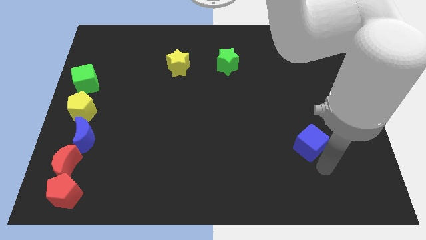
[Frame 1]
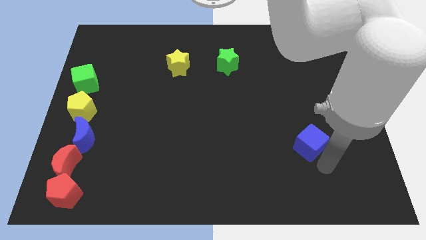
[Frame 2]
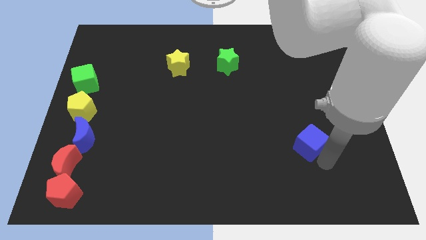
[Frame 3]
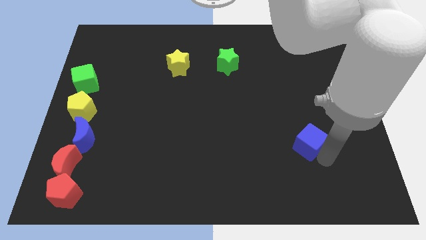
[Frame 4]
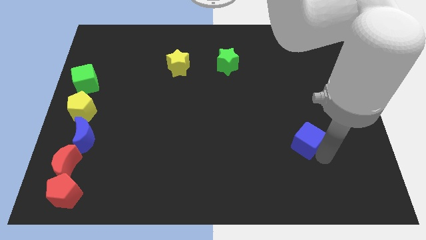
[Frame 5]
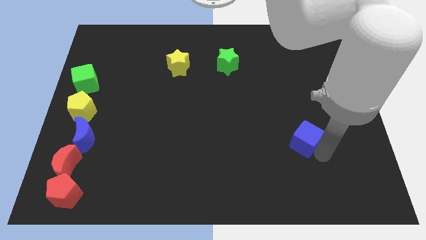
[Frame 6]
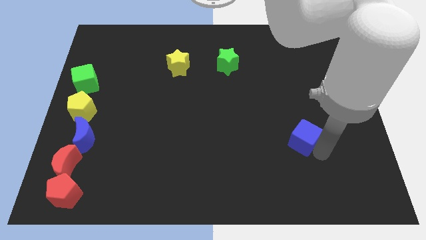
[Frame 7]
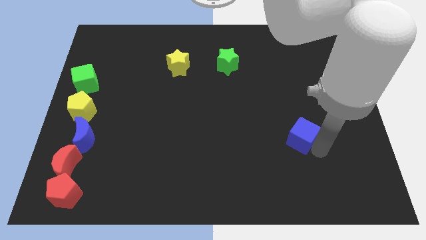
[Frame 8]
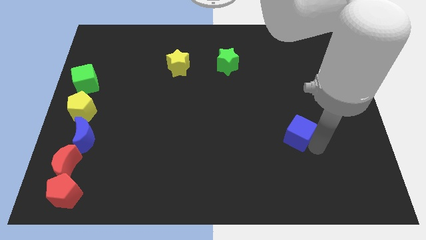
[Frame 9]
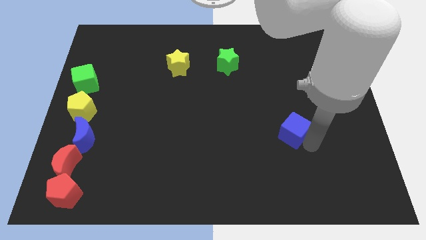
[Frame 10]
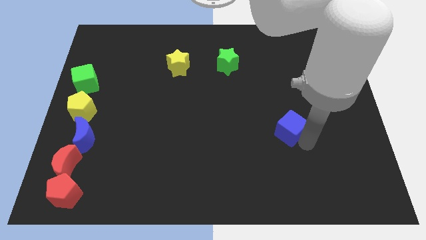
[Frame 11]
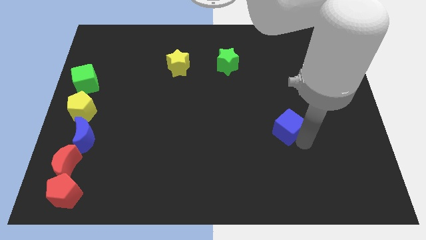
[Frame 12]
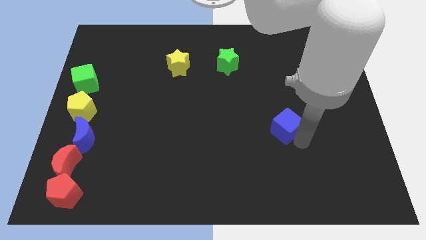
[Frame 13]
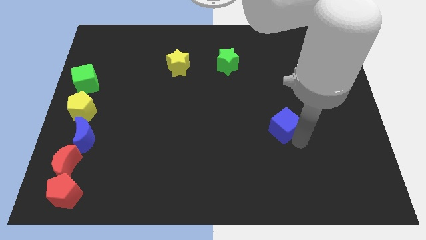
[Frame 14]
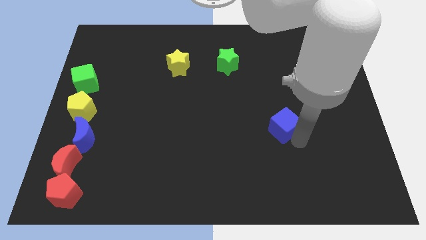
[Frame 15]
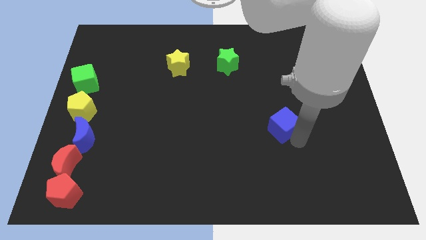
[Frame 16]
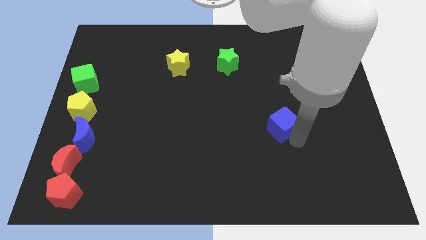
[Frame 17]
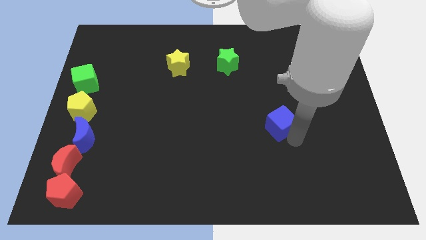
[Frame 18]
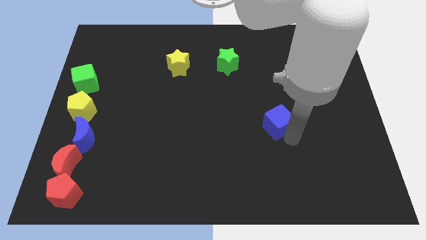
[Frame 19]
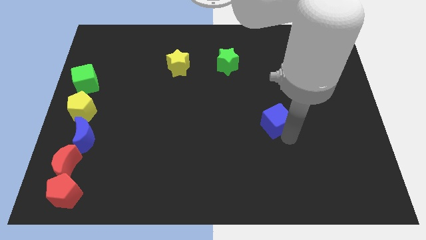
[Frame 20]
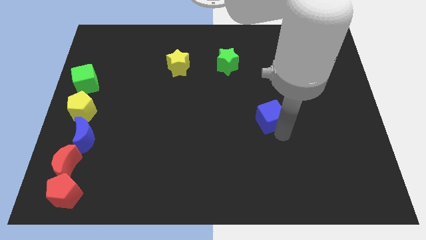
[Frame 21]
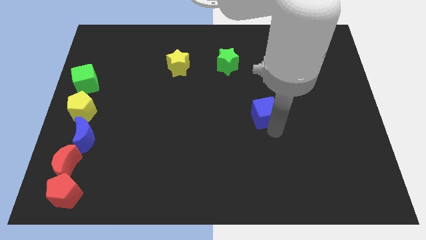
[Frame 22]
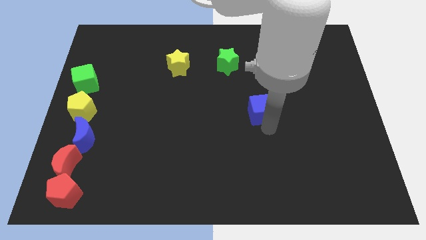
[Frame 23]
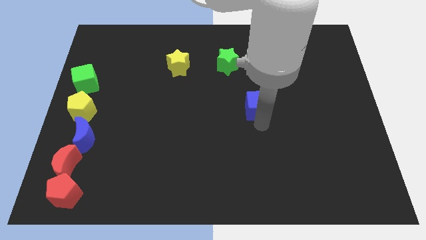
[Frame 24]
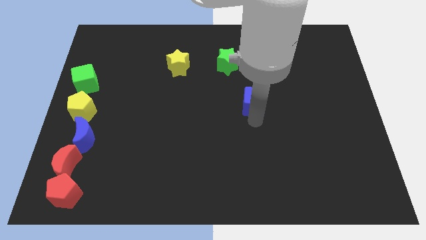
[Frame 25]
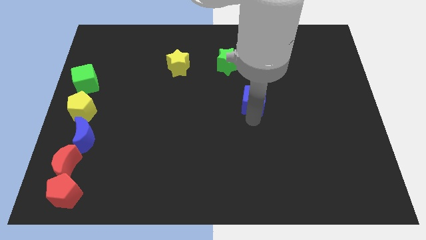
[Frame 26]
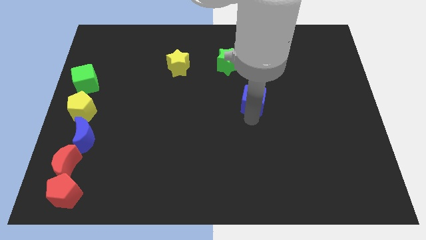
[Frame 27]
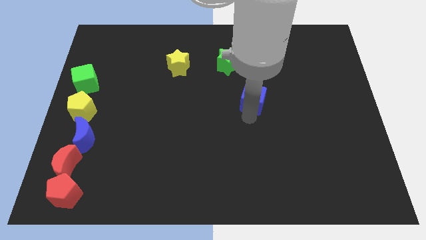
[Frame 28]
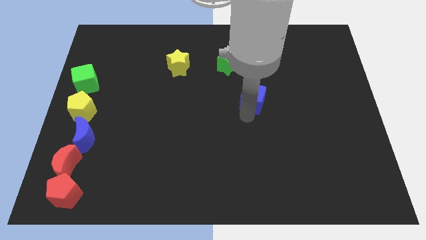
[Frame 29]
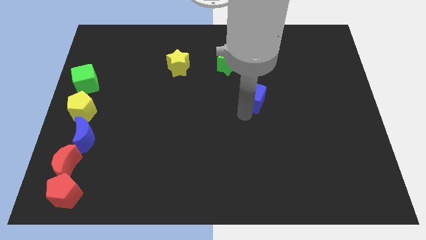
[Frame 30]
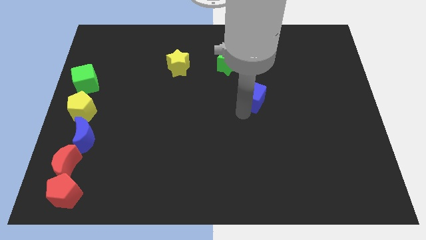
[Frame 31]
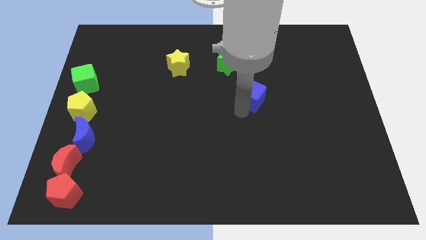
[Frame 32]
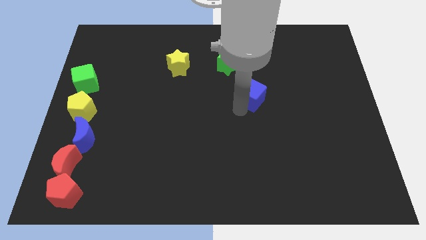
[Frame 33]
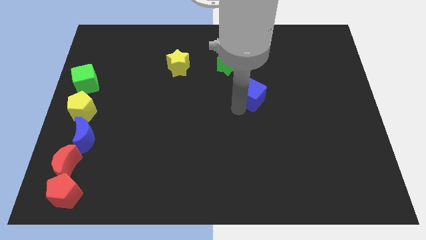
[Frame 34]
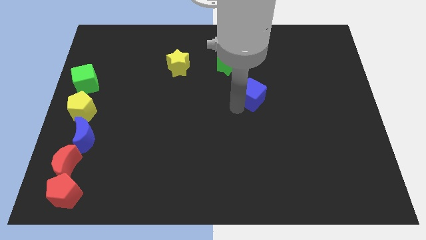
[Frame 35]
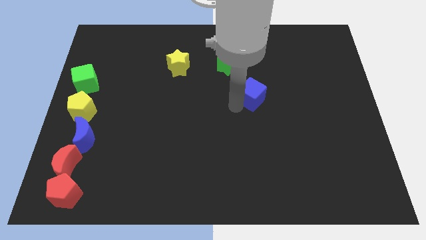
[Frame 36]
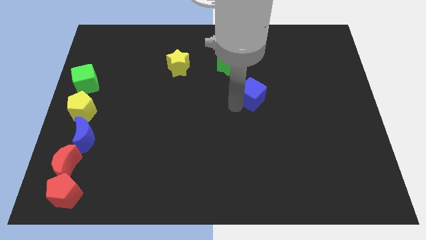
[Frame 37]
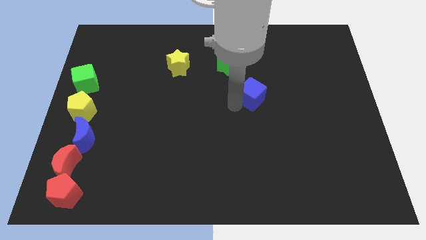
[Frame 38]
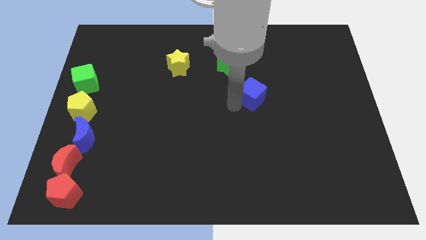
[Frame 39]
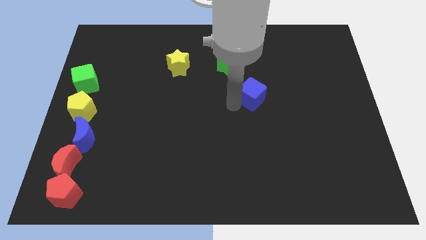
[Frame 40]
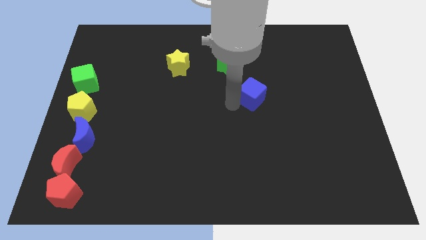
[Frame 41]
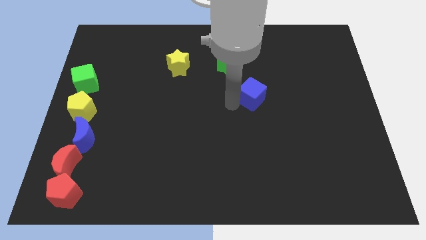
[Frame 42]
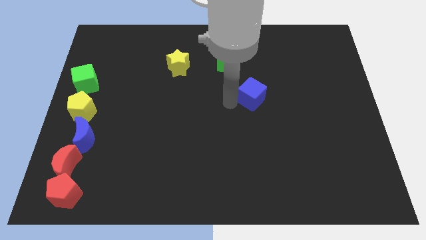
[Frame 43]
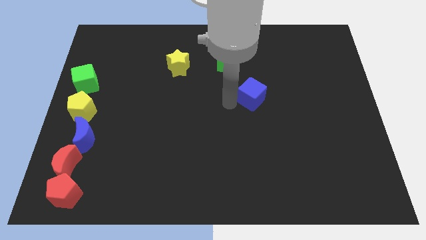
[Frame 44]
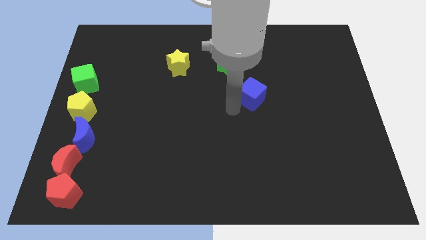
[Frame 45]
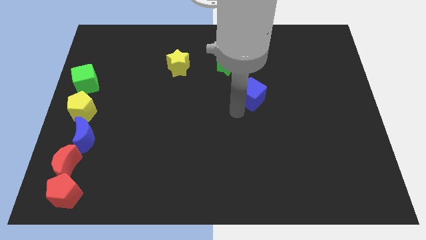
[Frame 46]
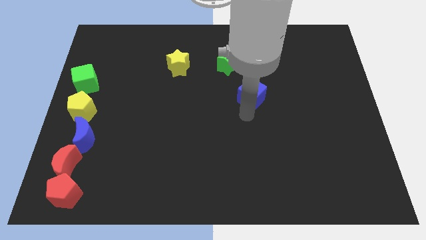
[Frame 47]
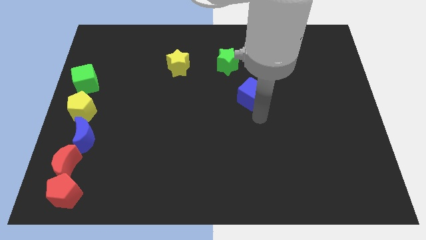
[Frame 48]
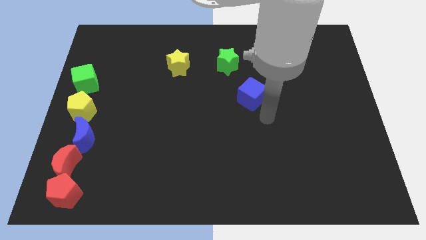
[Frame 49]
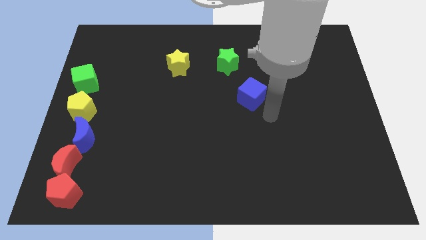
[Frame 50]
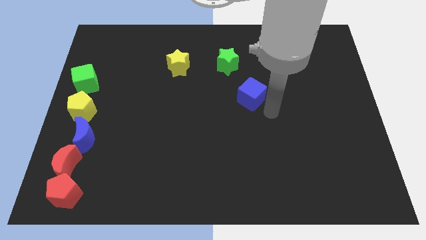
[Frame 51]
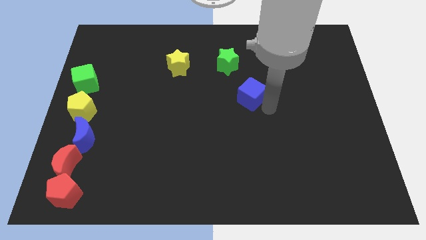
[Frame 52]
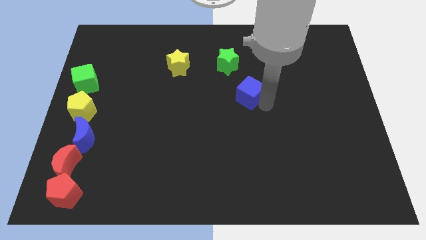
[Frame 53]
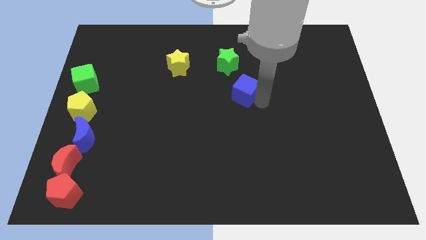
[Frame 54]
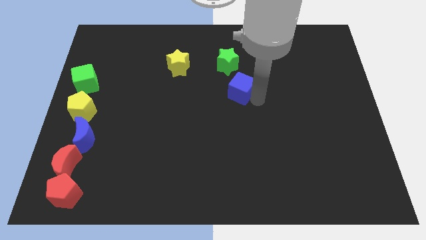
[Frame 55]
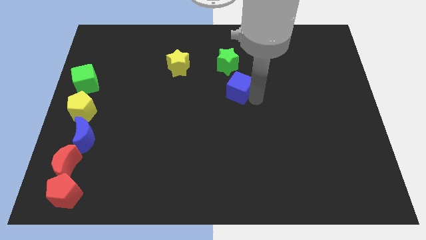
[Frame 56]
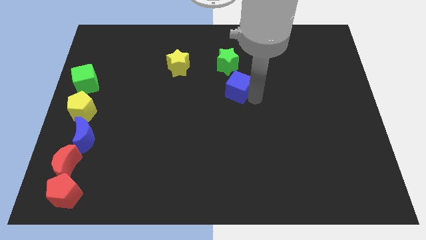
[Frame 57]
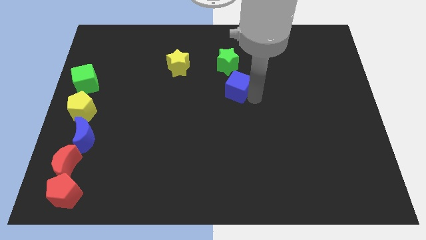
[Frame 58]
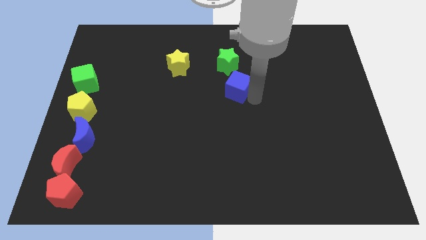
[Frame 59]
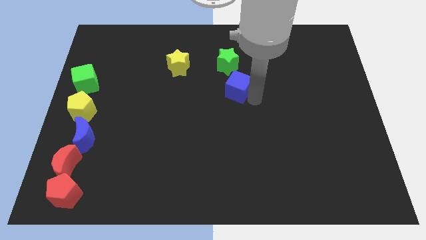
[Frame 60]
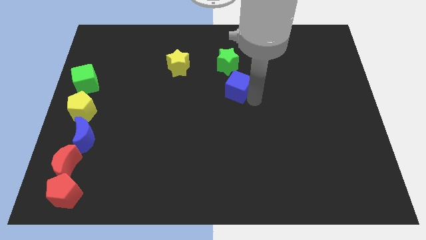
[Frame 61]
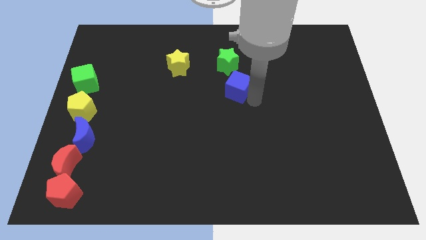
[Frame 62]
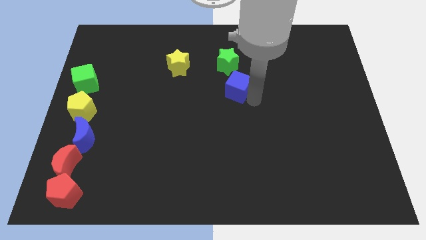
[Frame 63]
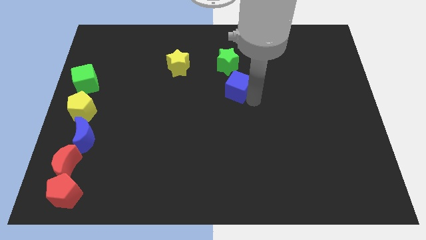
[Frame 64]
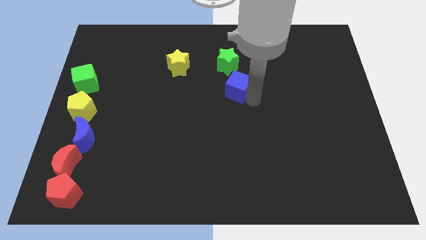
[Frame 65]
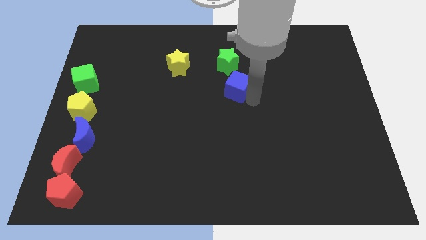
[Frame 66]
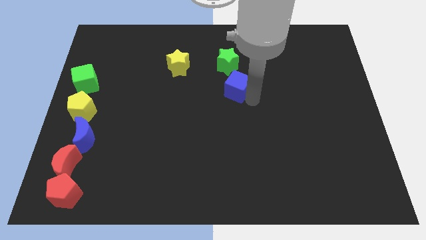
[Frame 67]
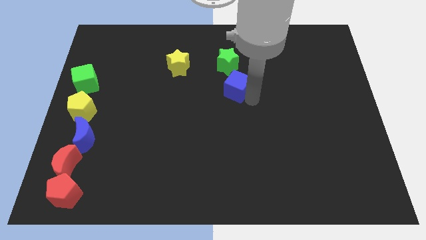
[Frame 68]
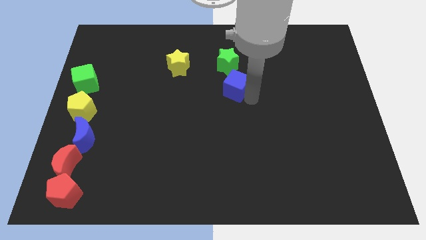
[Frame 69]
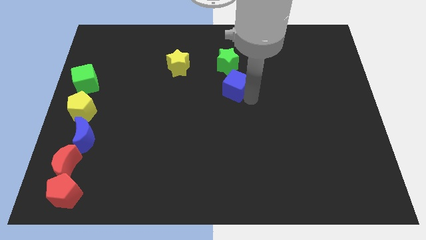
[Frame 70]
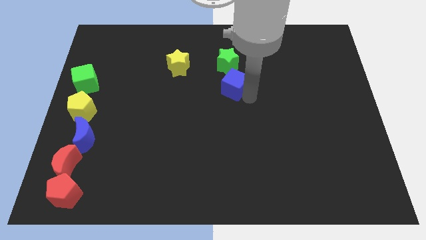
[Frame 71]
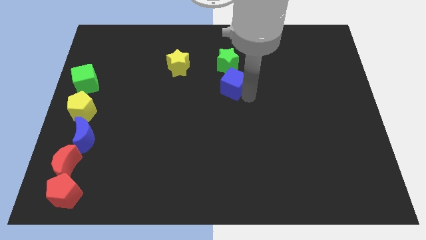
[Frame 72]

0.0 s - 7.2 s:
put the blue cube towards the green star

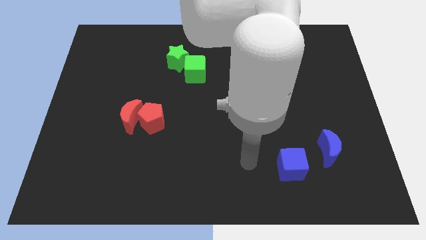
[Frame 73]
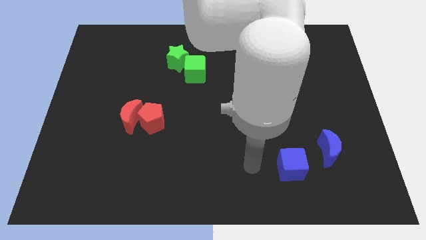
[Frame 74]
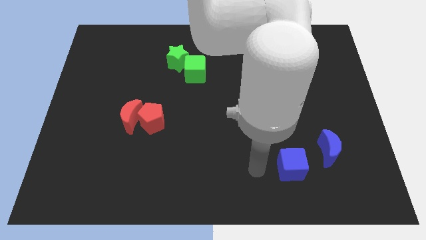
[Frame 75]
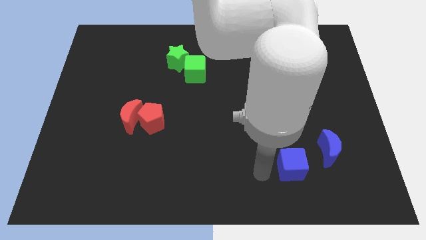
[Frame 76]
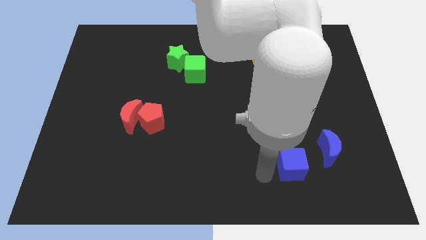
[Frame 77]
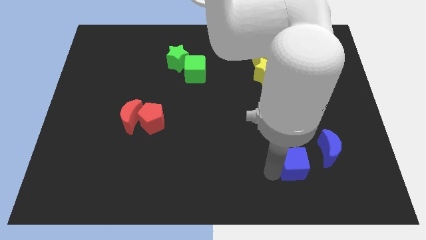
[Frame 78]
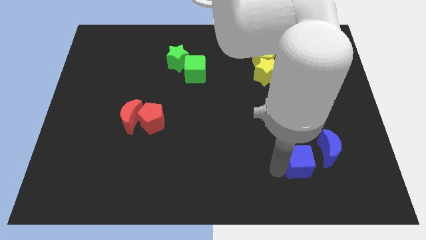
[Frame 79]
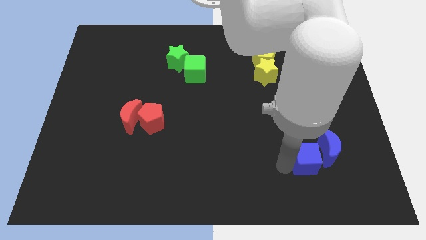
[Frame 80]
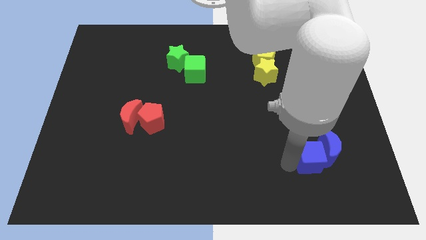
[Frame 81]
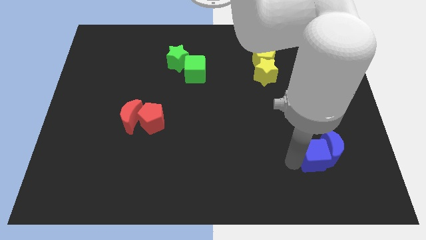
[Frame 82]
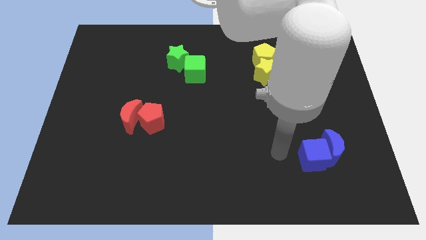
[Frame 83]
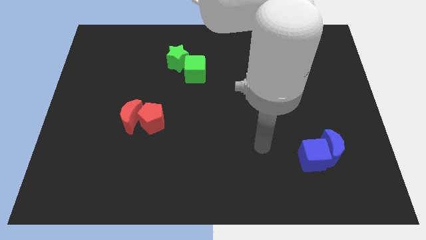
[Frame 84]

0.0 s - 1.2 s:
push the blue cube into the blue crescent

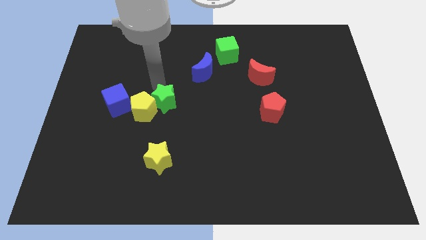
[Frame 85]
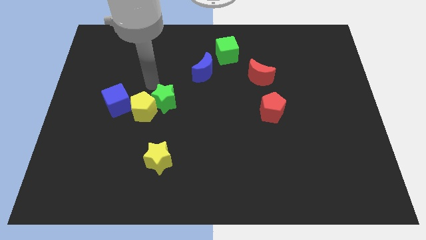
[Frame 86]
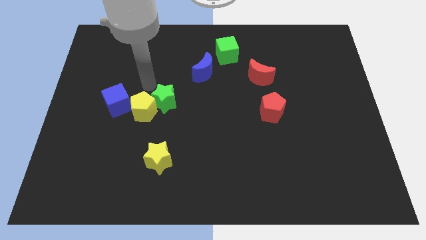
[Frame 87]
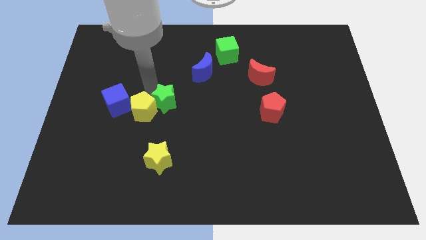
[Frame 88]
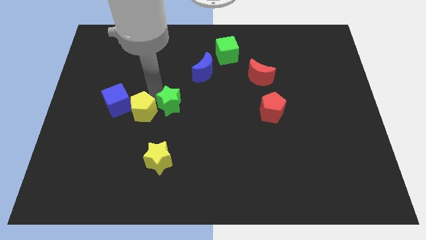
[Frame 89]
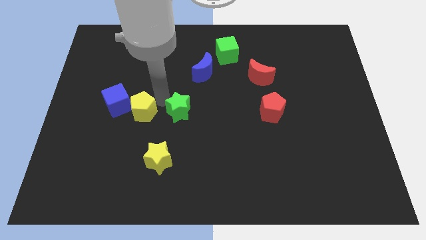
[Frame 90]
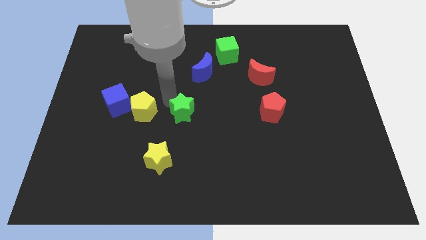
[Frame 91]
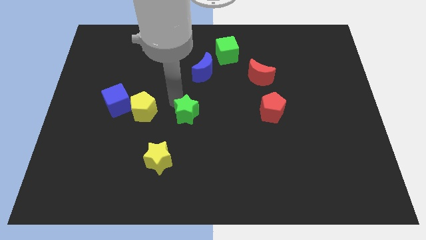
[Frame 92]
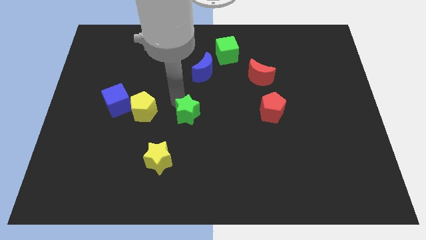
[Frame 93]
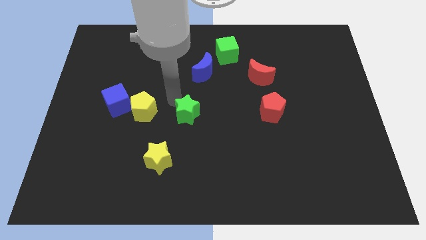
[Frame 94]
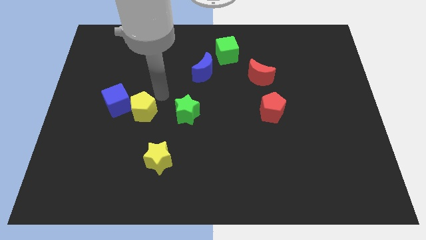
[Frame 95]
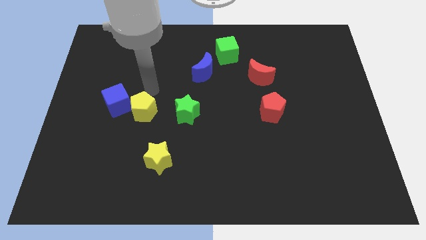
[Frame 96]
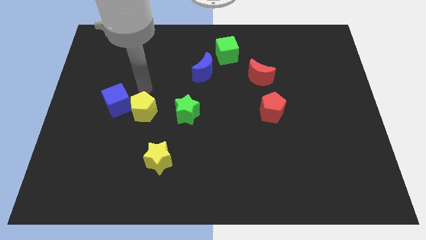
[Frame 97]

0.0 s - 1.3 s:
separate green star from the yellow pentagon
